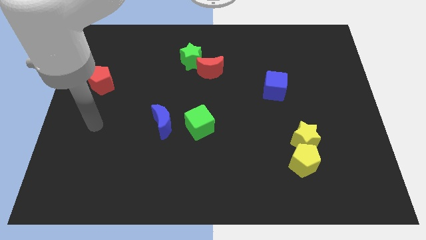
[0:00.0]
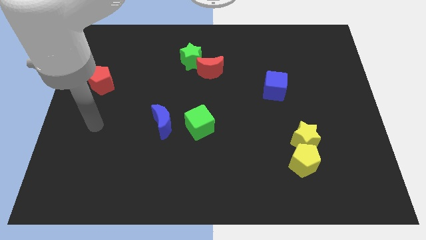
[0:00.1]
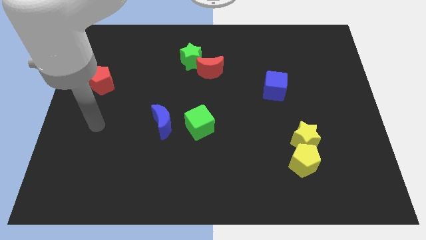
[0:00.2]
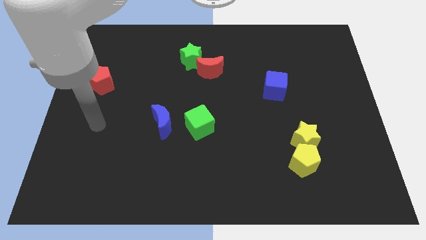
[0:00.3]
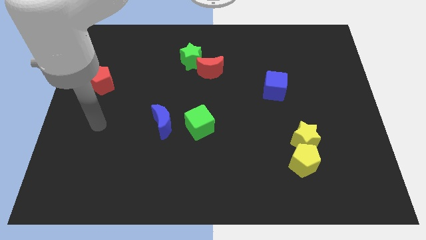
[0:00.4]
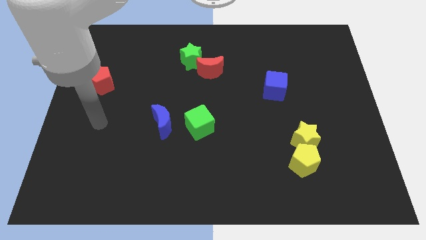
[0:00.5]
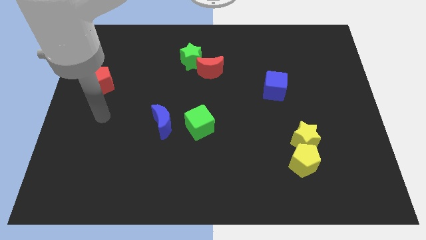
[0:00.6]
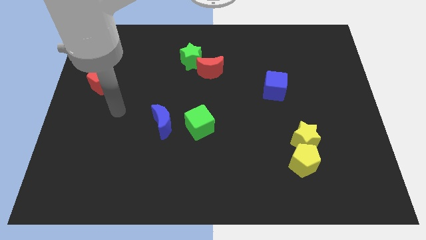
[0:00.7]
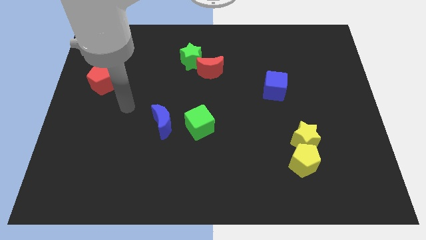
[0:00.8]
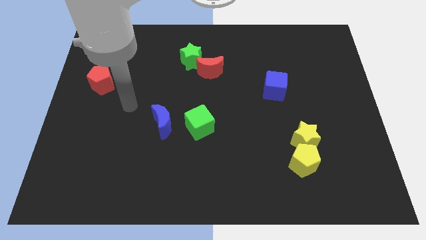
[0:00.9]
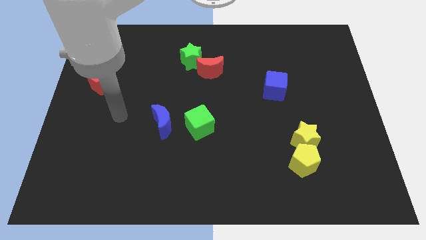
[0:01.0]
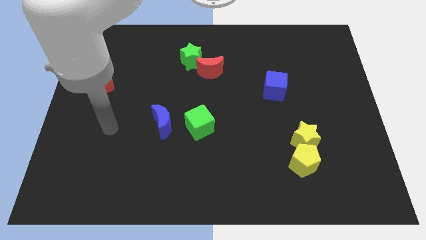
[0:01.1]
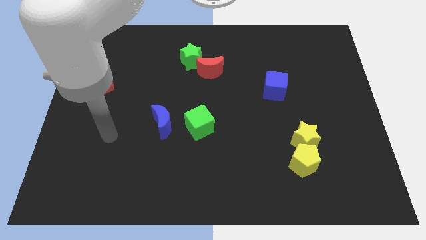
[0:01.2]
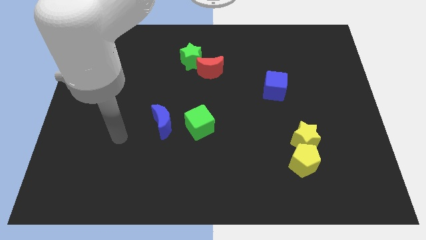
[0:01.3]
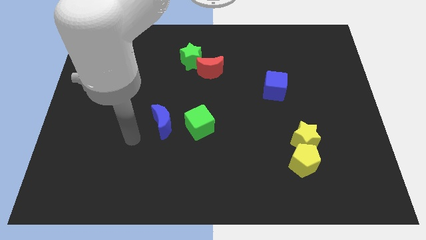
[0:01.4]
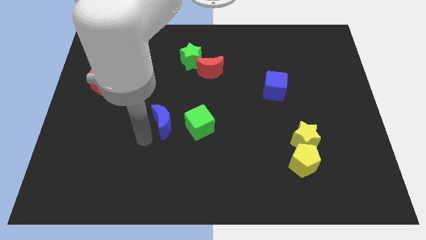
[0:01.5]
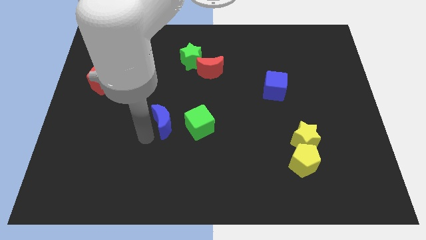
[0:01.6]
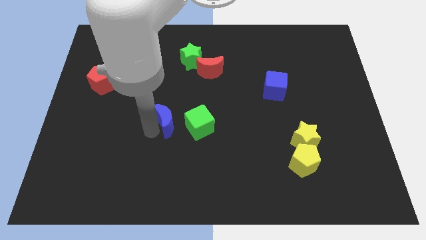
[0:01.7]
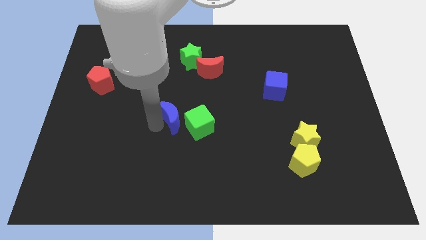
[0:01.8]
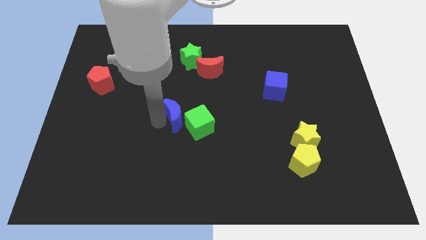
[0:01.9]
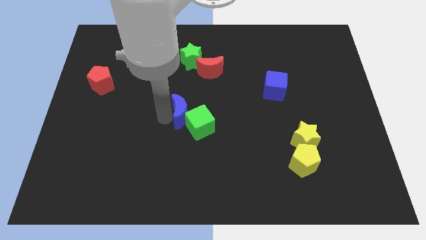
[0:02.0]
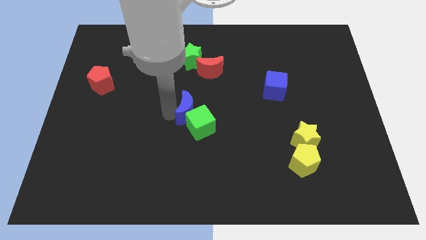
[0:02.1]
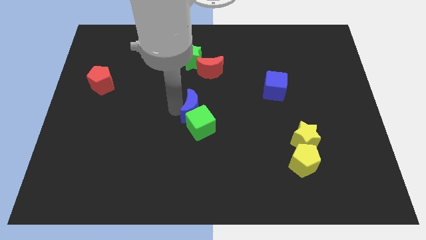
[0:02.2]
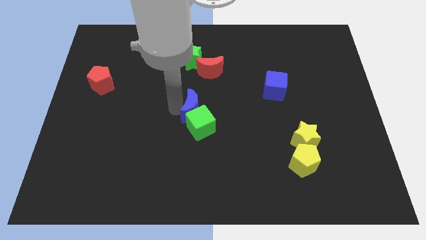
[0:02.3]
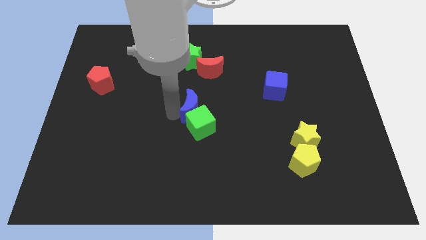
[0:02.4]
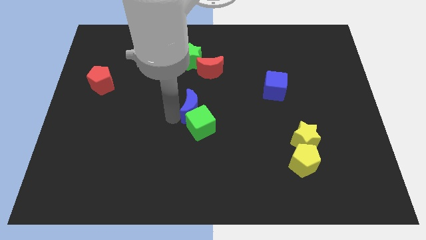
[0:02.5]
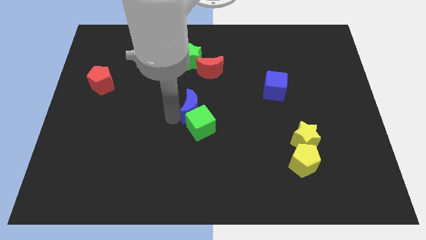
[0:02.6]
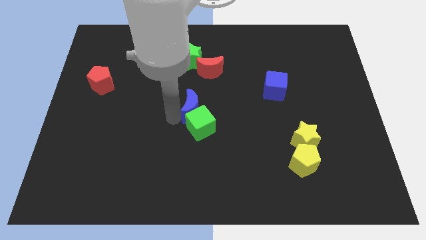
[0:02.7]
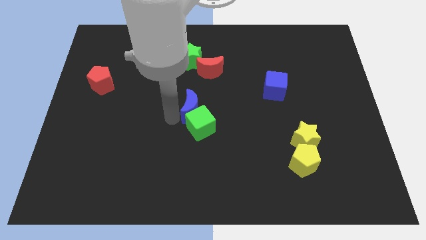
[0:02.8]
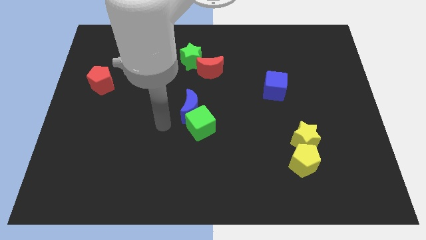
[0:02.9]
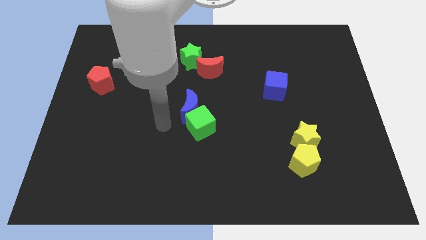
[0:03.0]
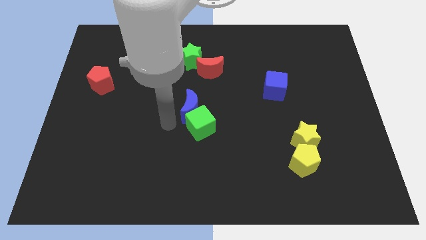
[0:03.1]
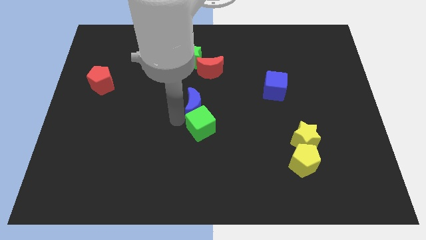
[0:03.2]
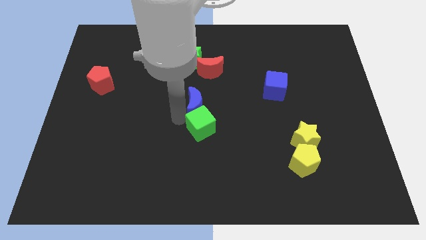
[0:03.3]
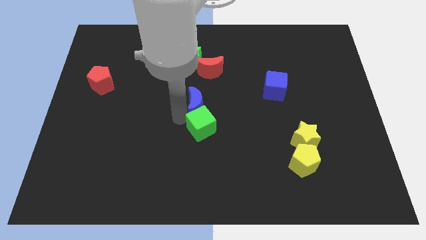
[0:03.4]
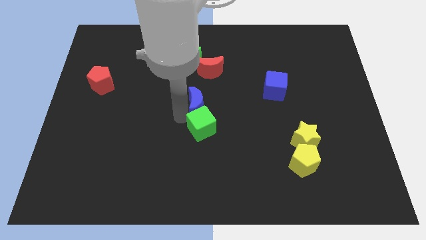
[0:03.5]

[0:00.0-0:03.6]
place the blue crescent above the green cube

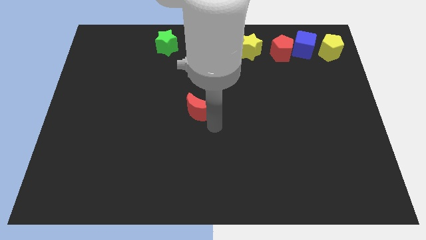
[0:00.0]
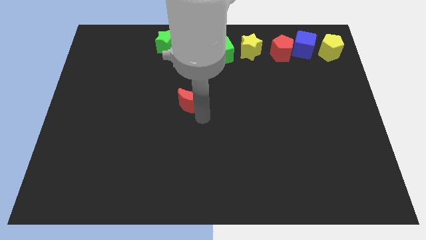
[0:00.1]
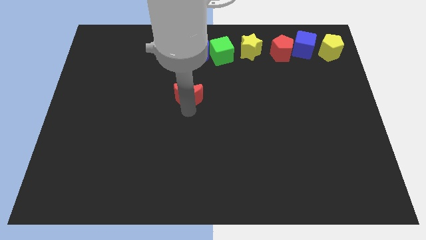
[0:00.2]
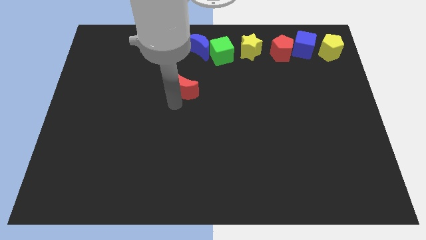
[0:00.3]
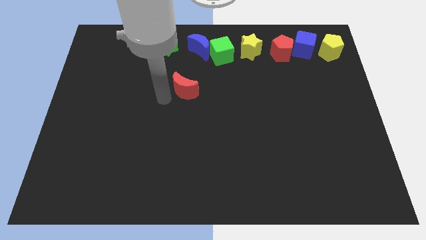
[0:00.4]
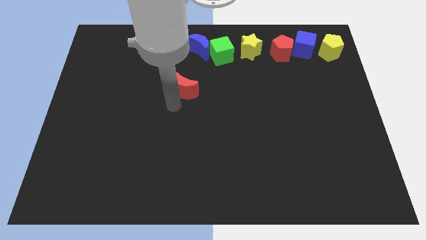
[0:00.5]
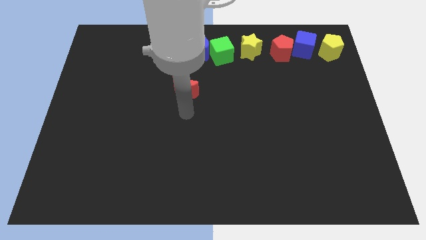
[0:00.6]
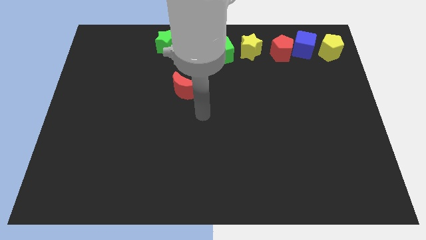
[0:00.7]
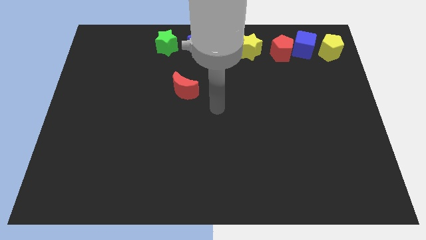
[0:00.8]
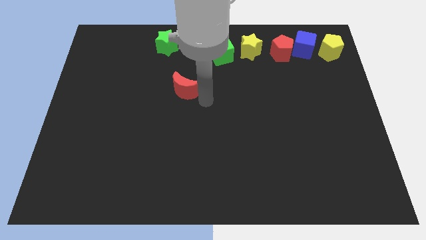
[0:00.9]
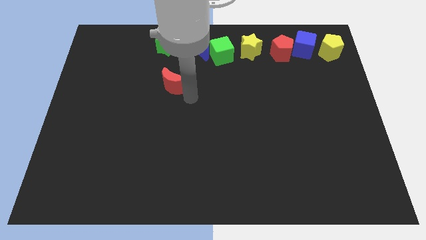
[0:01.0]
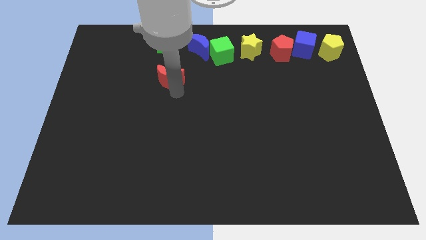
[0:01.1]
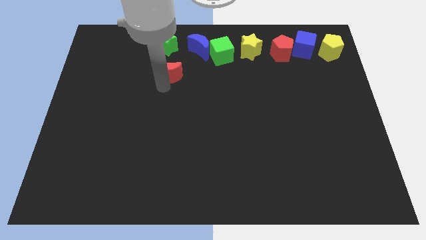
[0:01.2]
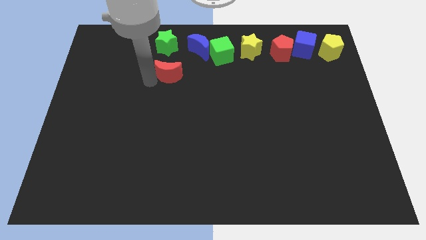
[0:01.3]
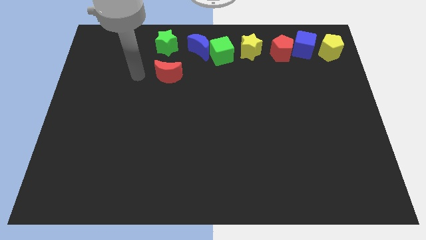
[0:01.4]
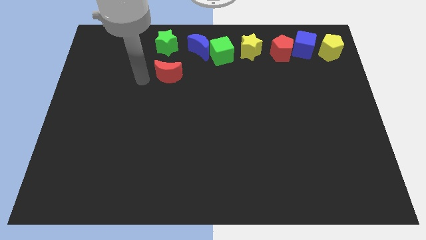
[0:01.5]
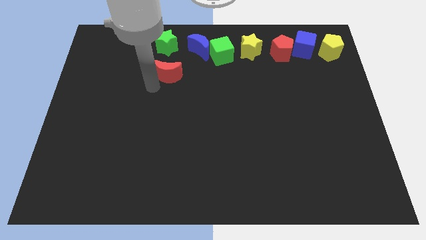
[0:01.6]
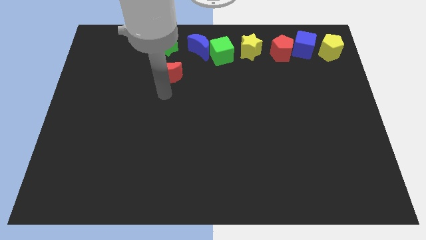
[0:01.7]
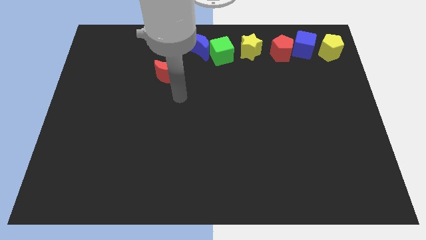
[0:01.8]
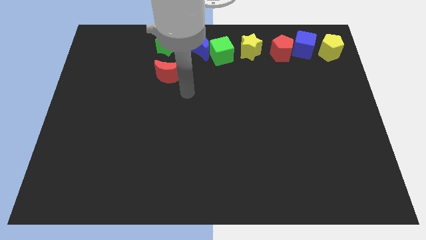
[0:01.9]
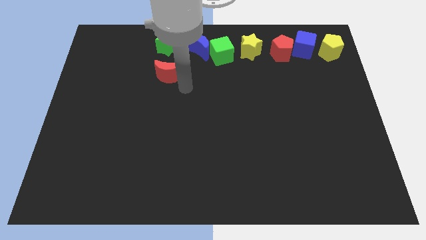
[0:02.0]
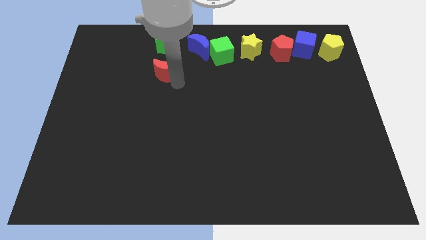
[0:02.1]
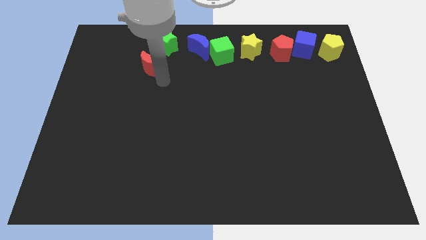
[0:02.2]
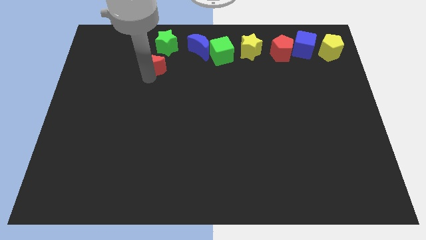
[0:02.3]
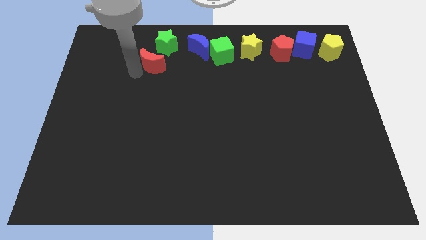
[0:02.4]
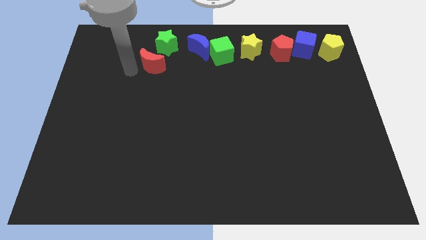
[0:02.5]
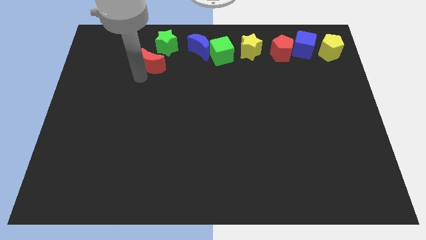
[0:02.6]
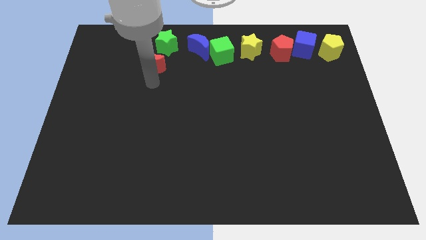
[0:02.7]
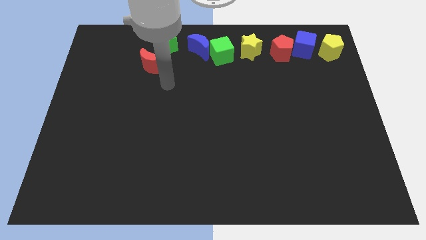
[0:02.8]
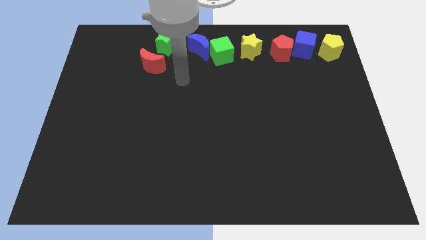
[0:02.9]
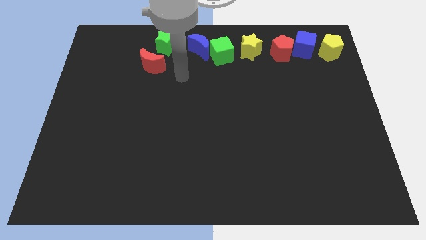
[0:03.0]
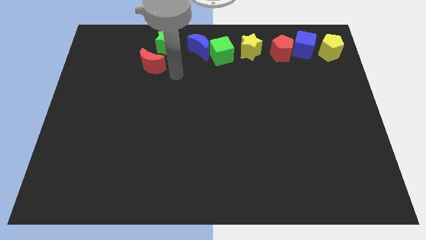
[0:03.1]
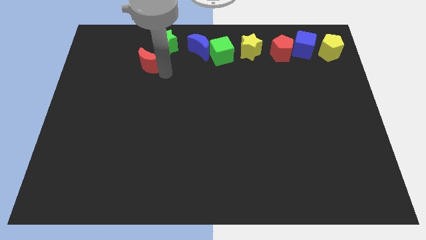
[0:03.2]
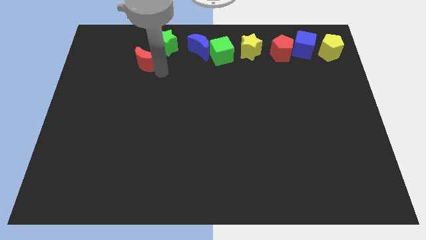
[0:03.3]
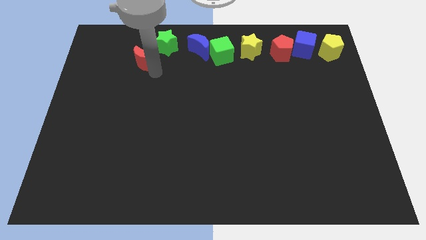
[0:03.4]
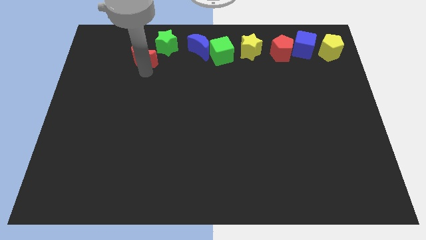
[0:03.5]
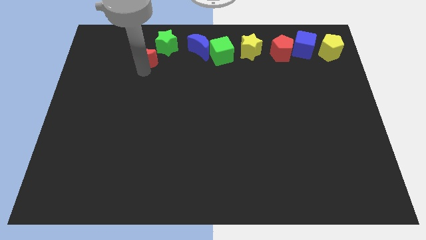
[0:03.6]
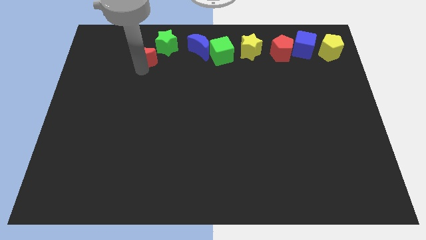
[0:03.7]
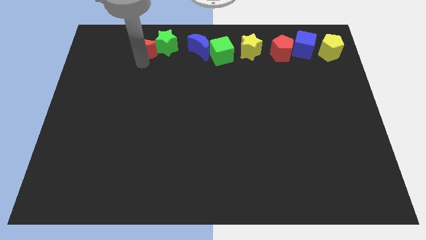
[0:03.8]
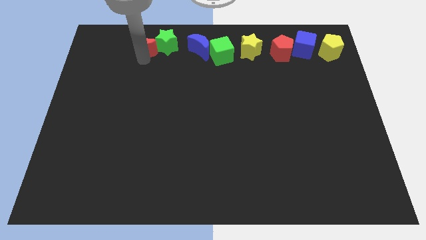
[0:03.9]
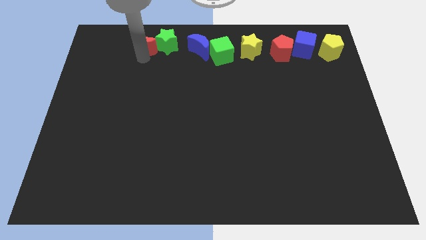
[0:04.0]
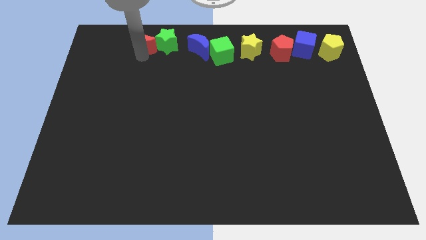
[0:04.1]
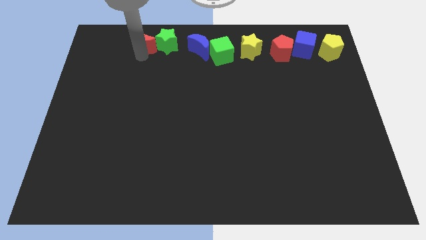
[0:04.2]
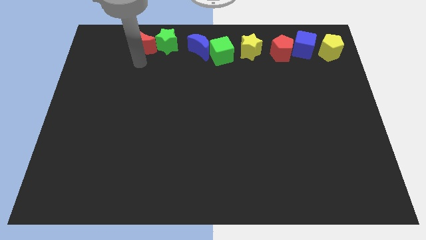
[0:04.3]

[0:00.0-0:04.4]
push the red crescent to the left of the green star

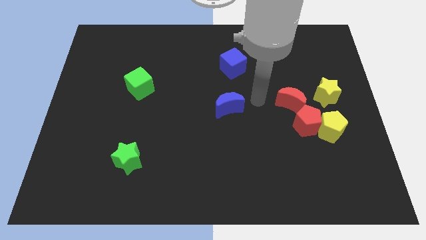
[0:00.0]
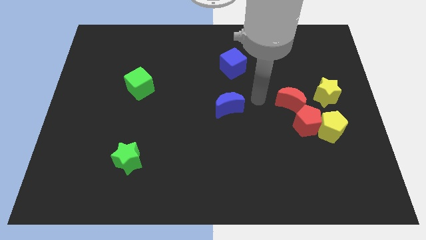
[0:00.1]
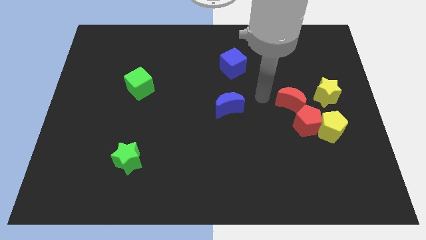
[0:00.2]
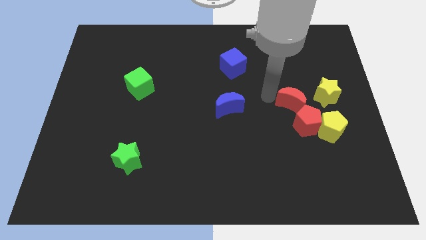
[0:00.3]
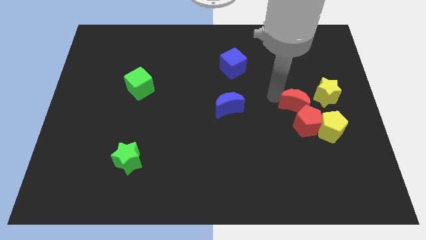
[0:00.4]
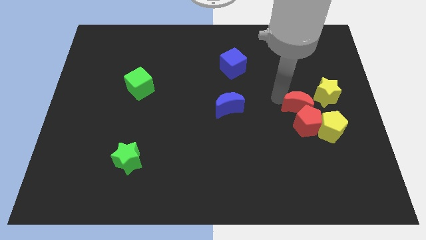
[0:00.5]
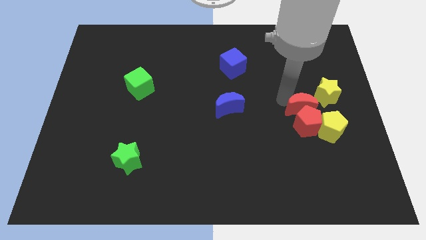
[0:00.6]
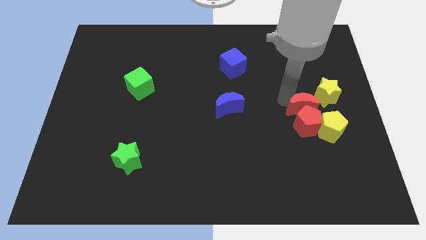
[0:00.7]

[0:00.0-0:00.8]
move the red crescent close to red pentagon
